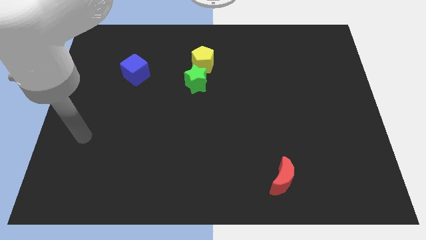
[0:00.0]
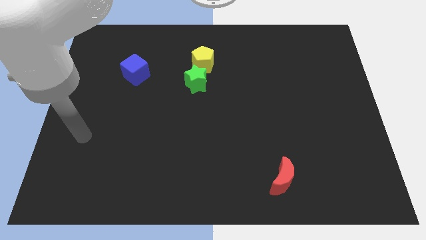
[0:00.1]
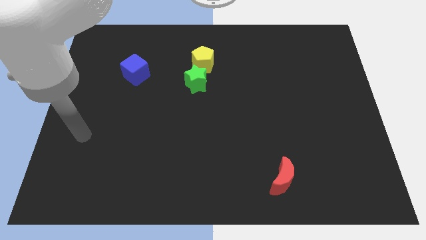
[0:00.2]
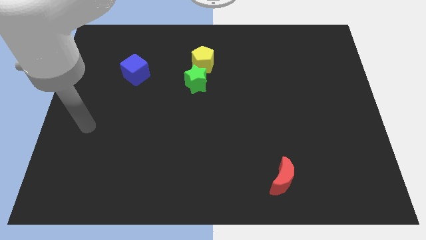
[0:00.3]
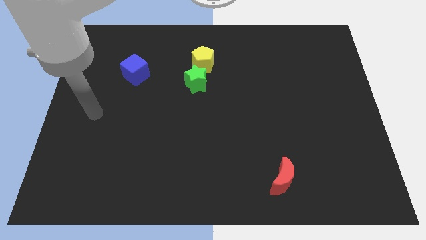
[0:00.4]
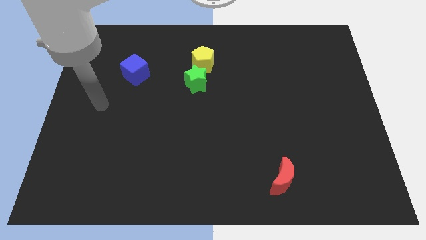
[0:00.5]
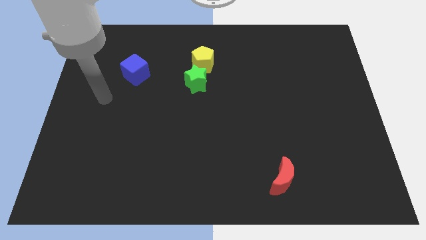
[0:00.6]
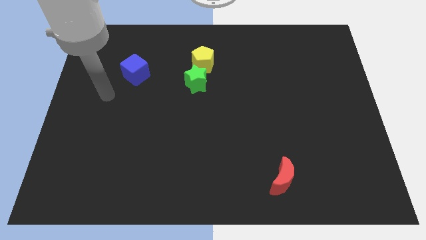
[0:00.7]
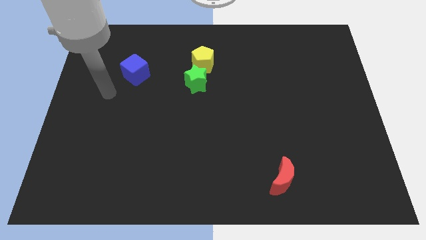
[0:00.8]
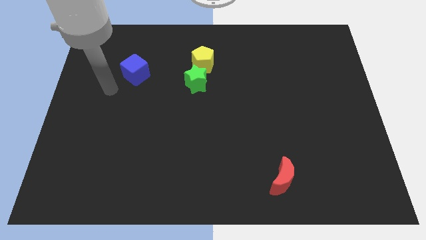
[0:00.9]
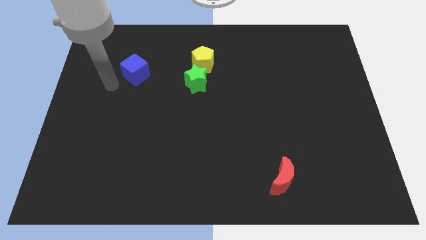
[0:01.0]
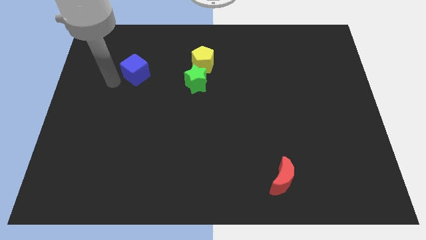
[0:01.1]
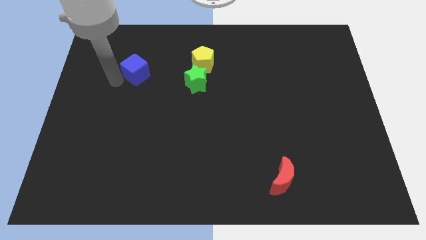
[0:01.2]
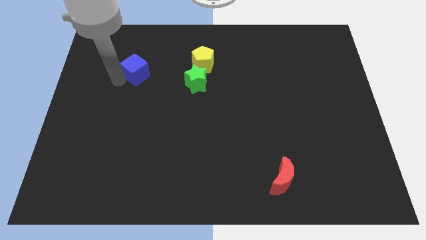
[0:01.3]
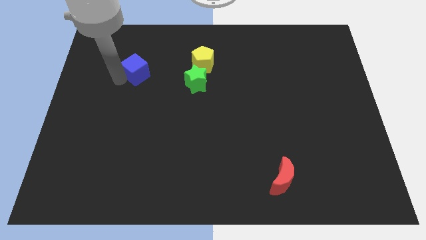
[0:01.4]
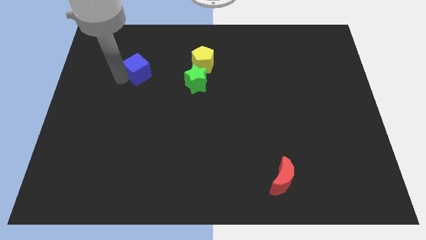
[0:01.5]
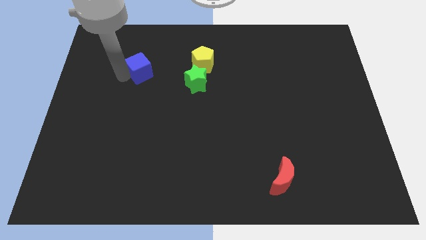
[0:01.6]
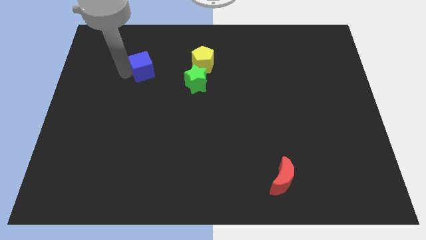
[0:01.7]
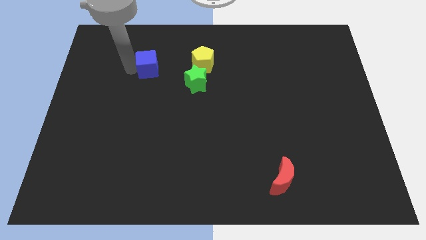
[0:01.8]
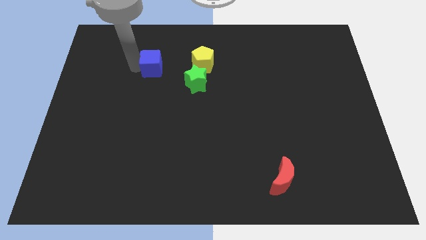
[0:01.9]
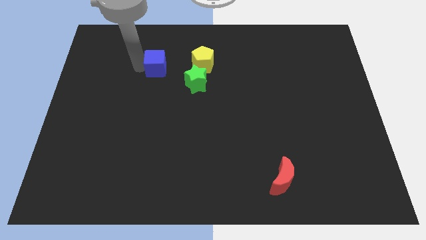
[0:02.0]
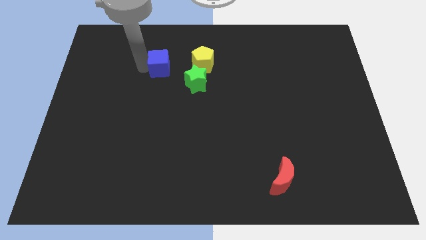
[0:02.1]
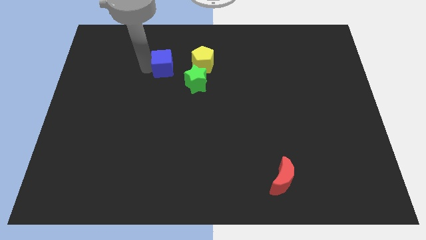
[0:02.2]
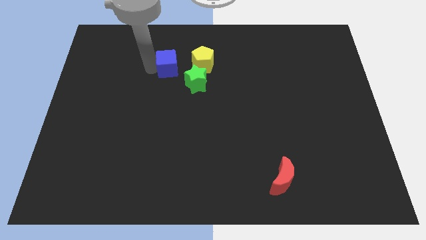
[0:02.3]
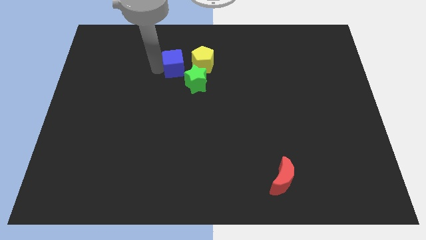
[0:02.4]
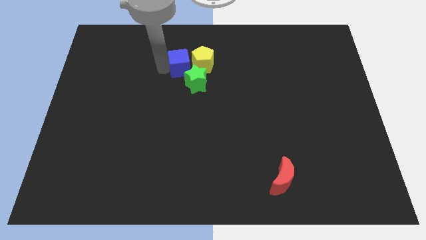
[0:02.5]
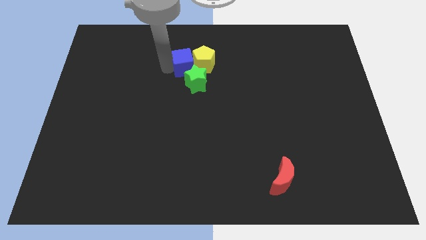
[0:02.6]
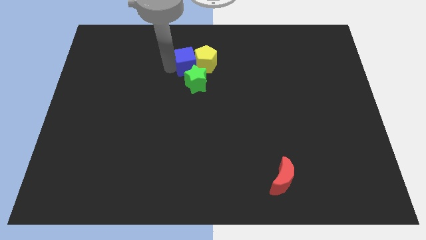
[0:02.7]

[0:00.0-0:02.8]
slide the blue block close to the pentagon

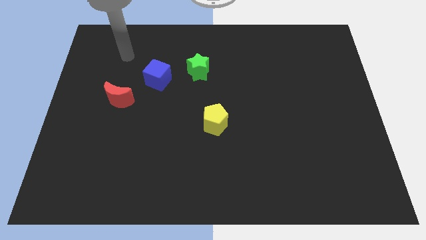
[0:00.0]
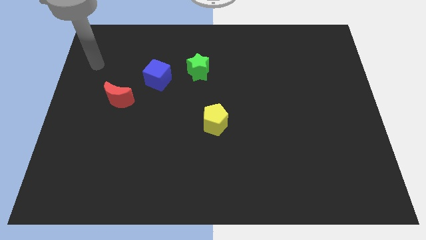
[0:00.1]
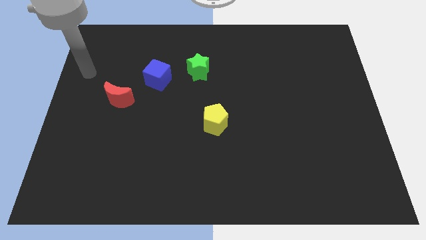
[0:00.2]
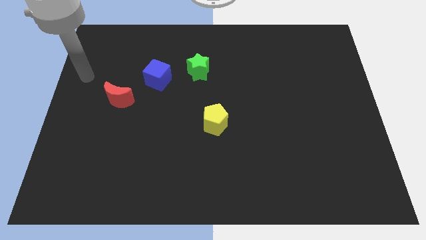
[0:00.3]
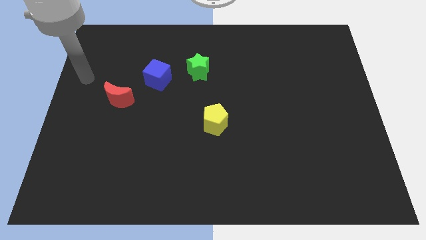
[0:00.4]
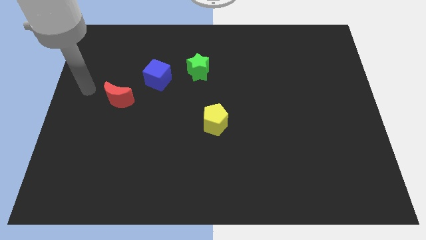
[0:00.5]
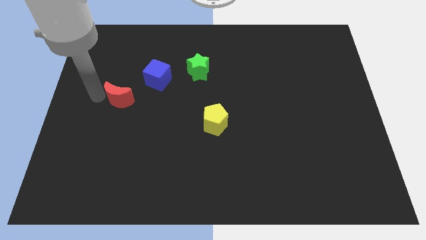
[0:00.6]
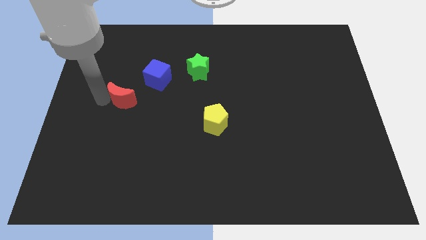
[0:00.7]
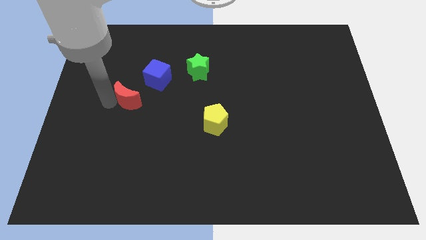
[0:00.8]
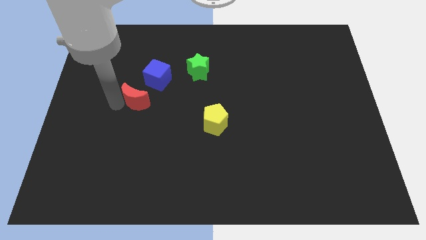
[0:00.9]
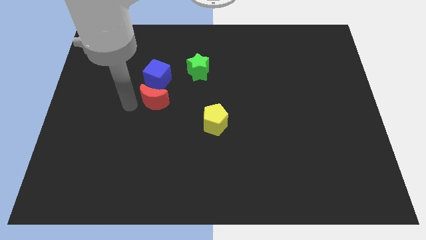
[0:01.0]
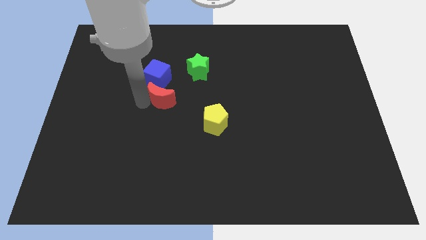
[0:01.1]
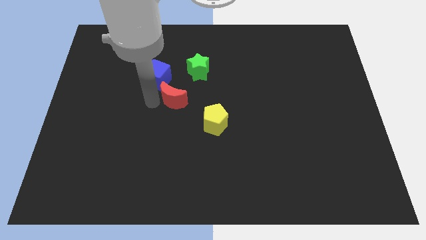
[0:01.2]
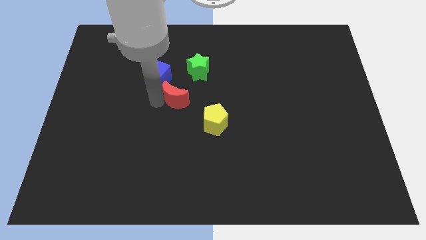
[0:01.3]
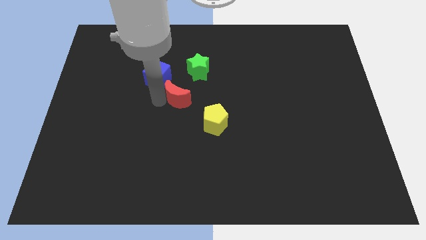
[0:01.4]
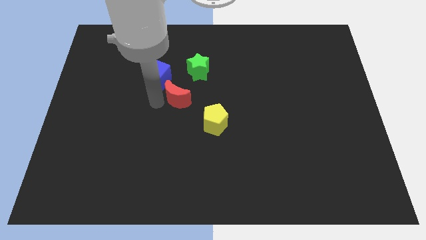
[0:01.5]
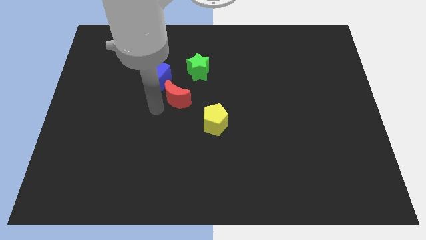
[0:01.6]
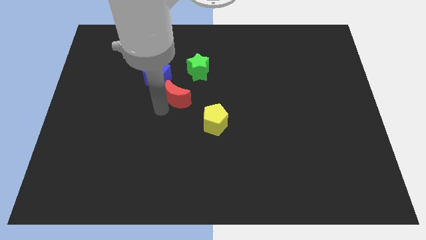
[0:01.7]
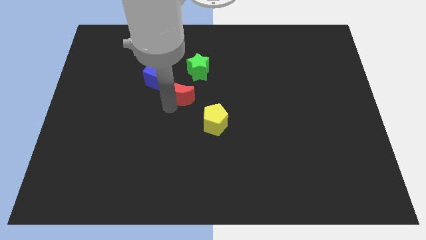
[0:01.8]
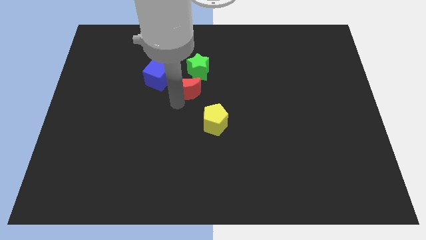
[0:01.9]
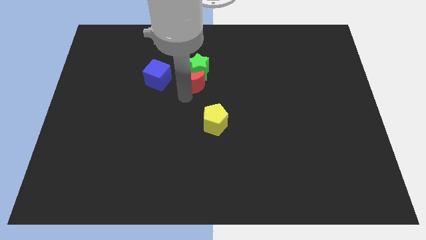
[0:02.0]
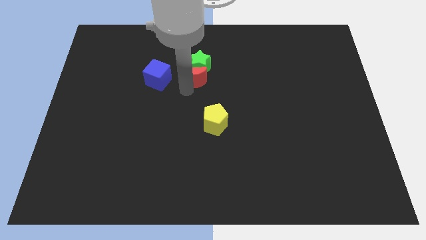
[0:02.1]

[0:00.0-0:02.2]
push the red moon close to the green block

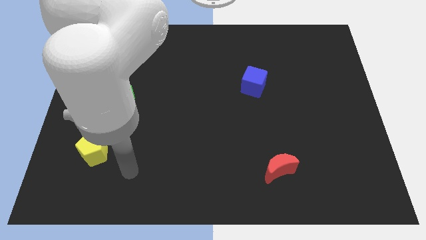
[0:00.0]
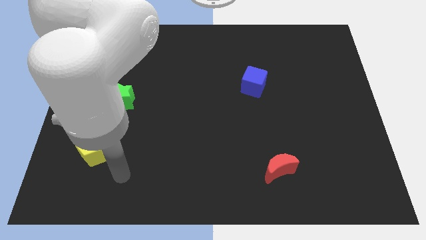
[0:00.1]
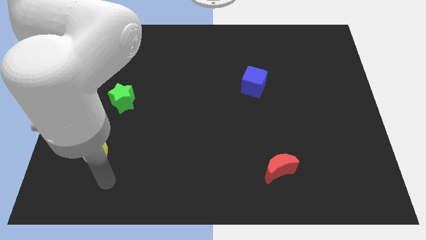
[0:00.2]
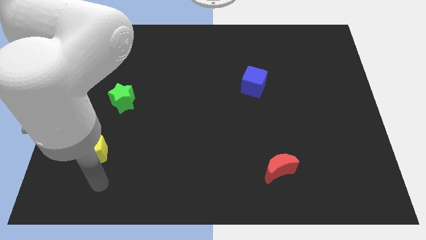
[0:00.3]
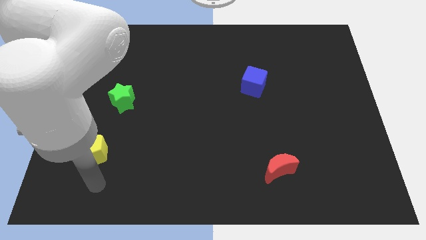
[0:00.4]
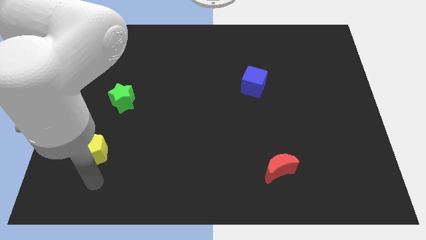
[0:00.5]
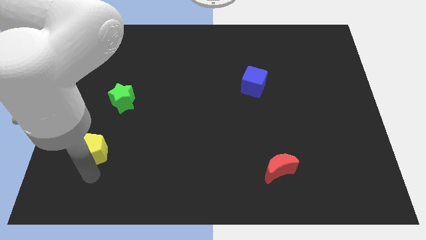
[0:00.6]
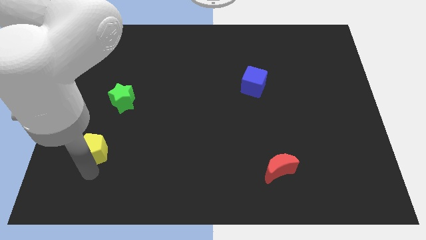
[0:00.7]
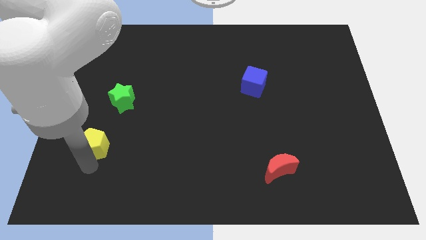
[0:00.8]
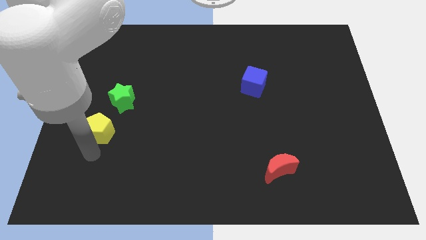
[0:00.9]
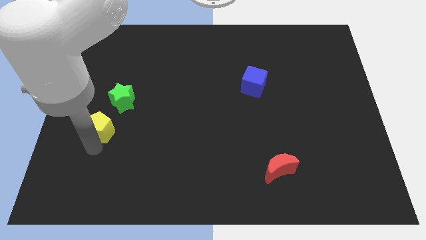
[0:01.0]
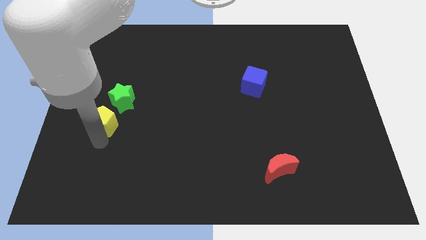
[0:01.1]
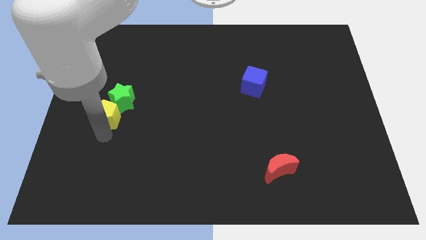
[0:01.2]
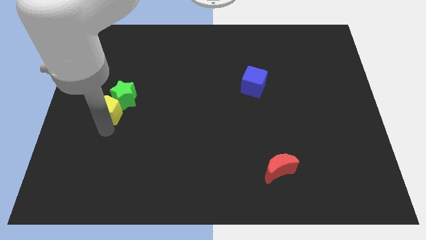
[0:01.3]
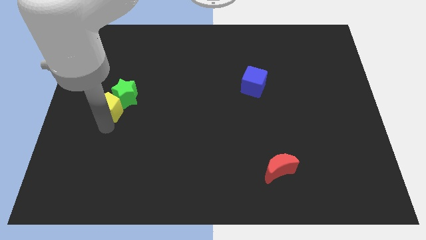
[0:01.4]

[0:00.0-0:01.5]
slide the yellow block towards the green star

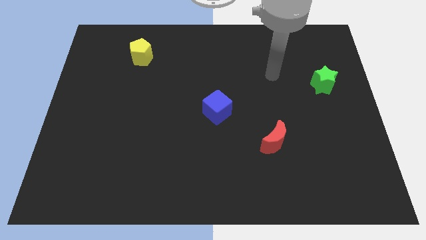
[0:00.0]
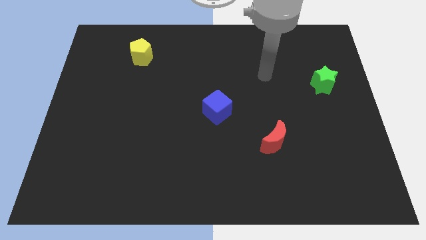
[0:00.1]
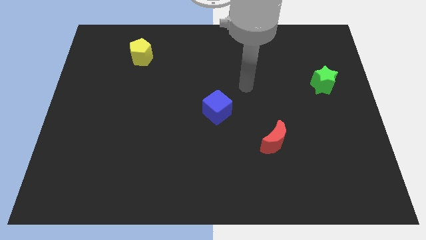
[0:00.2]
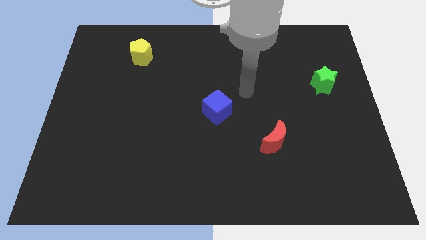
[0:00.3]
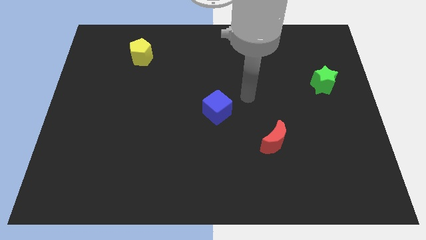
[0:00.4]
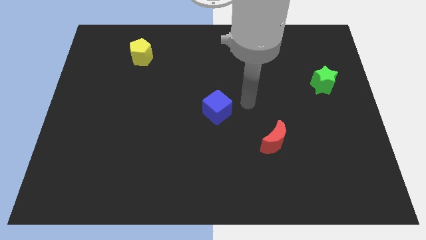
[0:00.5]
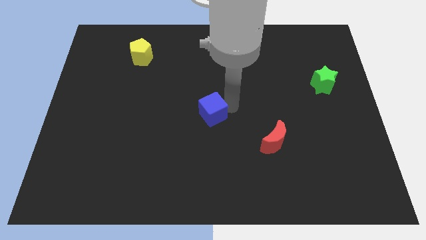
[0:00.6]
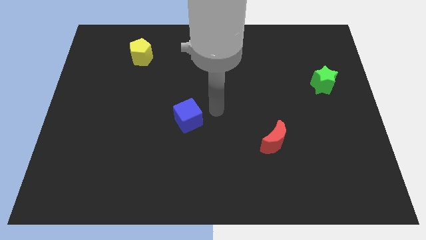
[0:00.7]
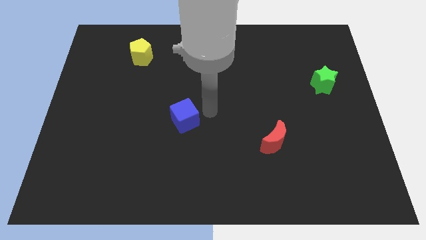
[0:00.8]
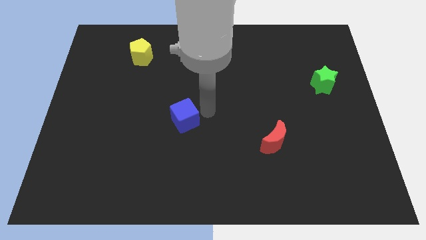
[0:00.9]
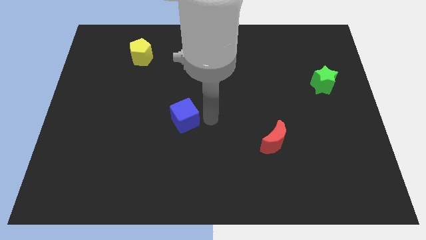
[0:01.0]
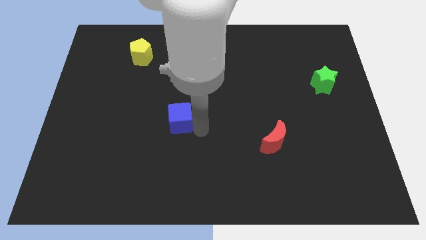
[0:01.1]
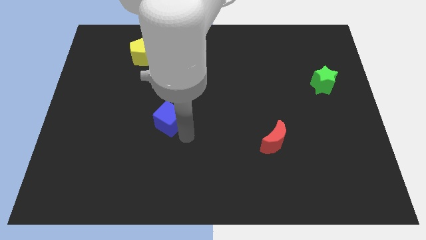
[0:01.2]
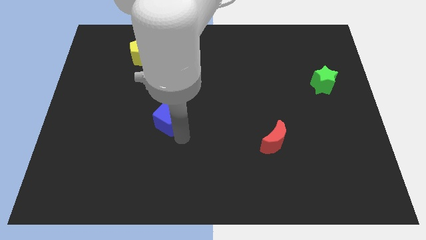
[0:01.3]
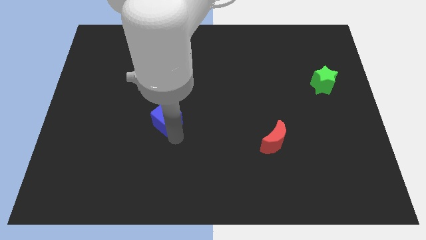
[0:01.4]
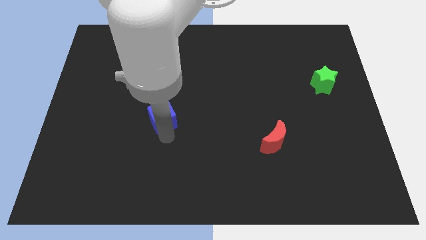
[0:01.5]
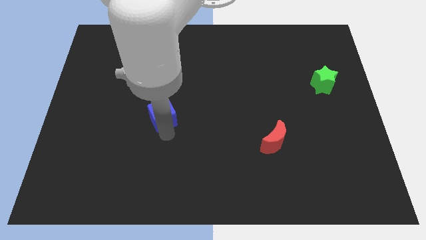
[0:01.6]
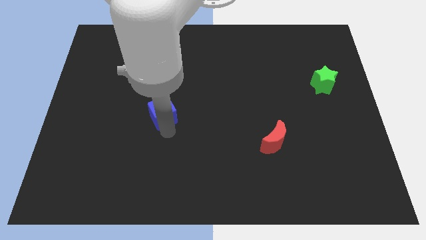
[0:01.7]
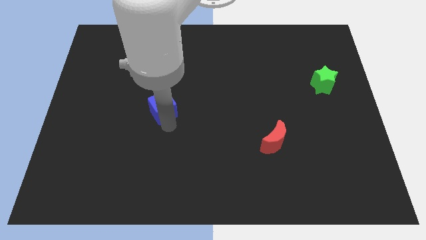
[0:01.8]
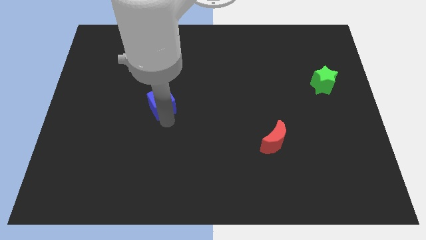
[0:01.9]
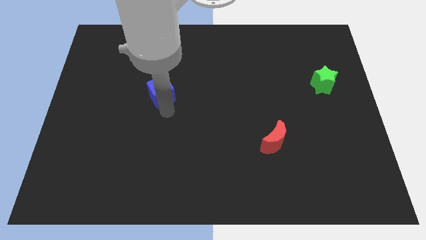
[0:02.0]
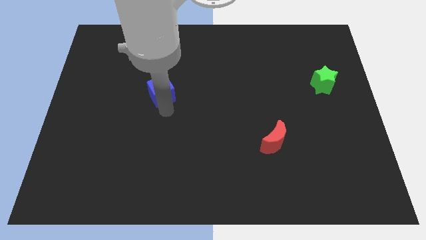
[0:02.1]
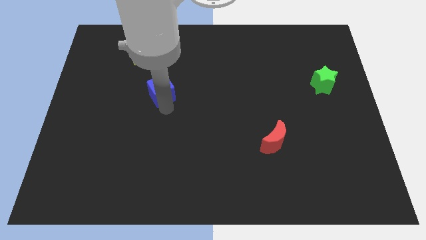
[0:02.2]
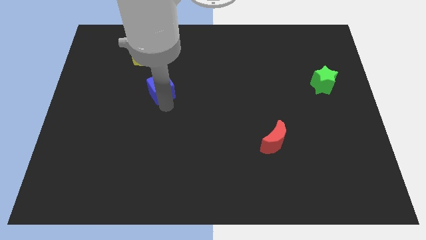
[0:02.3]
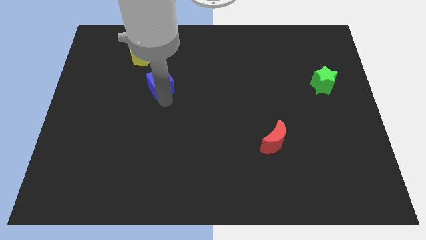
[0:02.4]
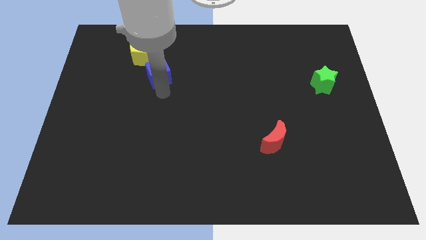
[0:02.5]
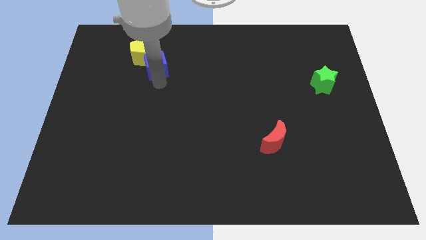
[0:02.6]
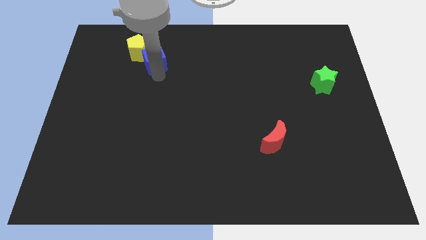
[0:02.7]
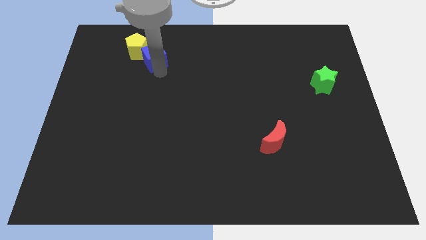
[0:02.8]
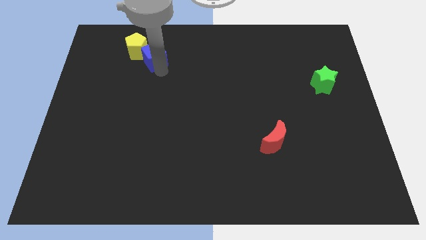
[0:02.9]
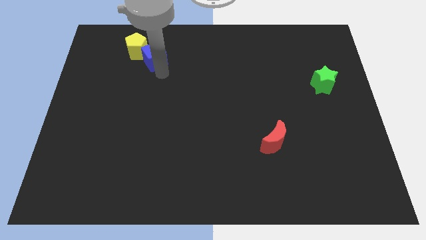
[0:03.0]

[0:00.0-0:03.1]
push the cube to the yellow block
